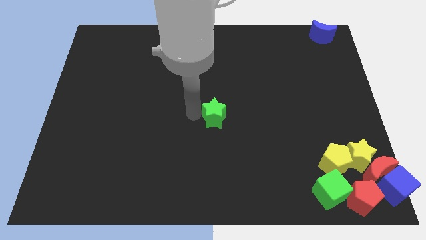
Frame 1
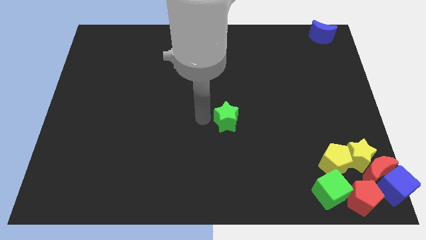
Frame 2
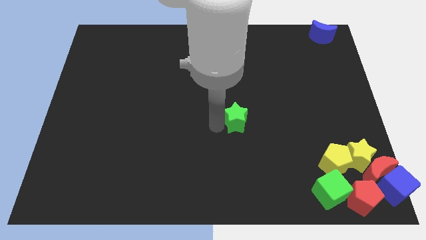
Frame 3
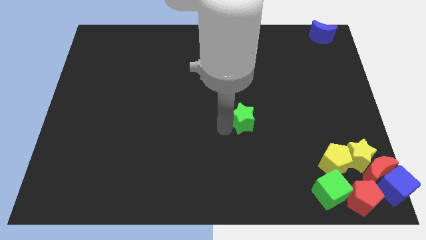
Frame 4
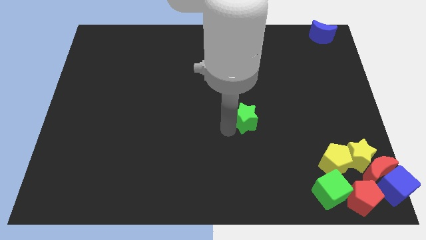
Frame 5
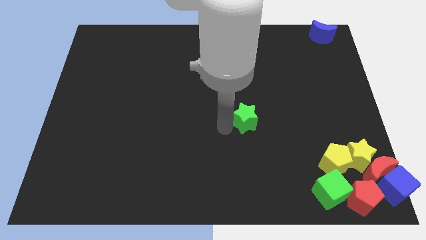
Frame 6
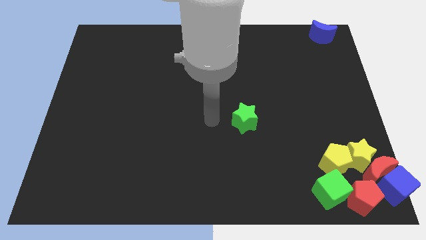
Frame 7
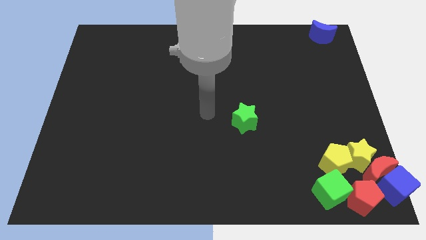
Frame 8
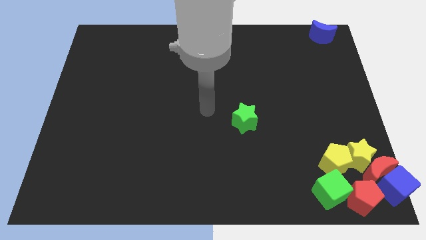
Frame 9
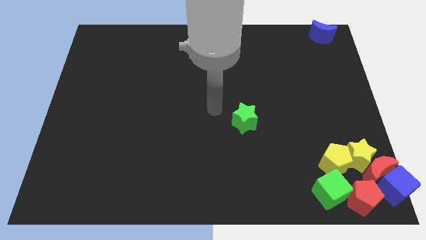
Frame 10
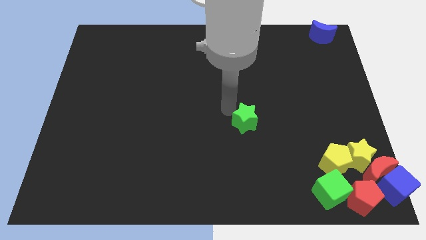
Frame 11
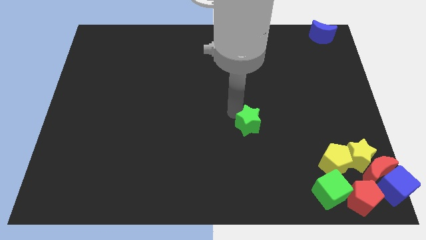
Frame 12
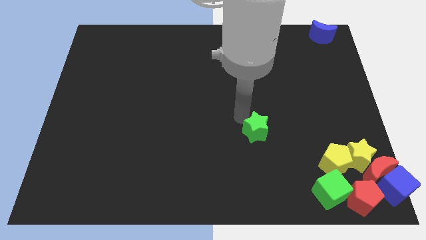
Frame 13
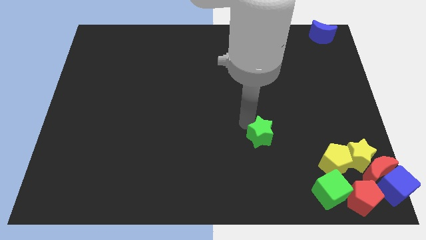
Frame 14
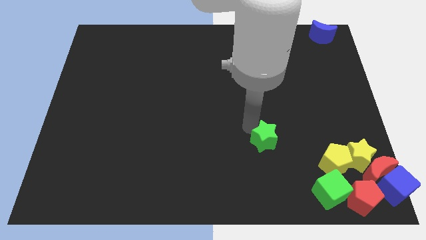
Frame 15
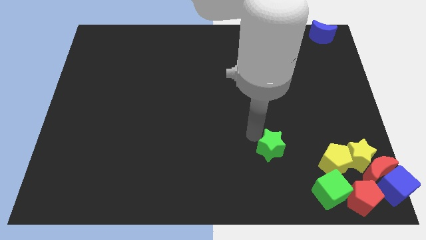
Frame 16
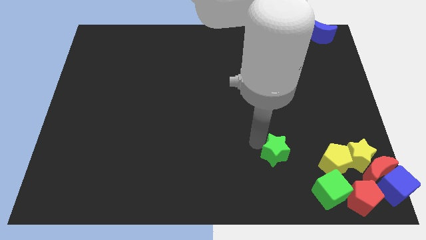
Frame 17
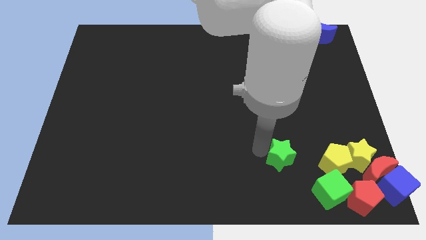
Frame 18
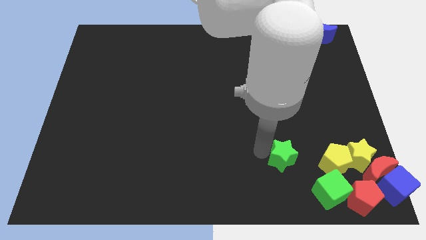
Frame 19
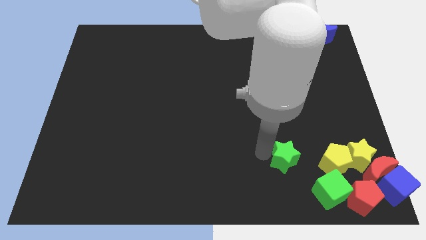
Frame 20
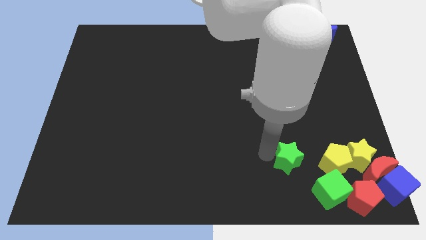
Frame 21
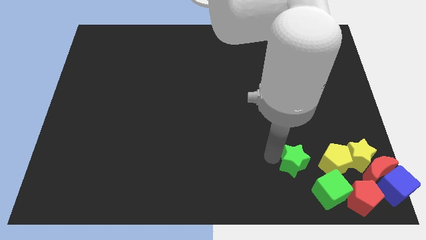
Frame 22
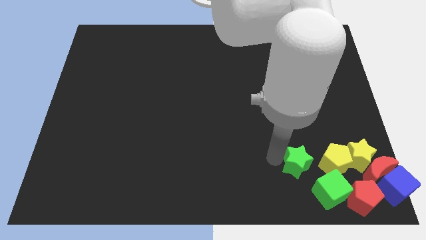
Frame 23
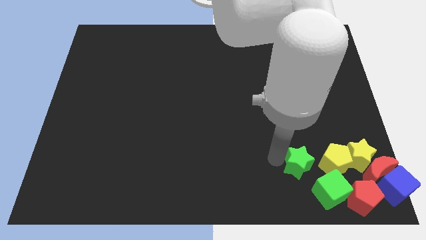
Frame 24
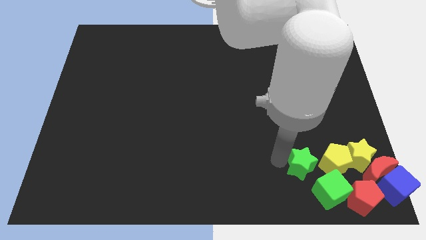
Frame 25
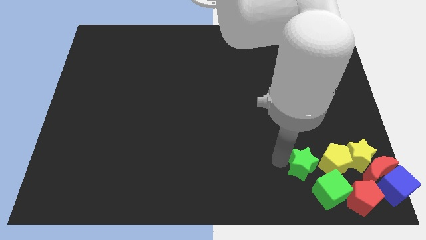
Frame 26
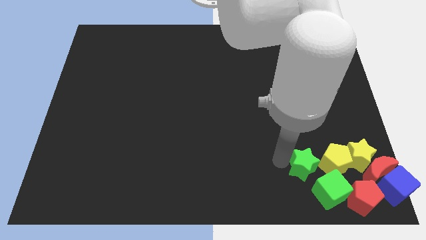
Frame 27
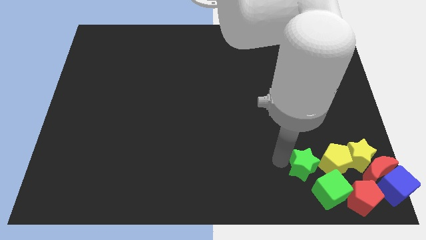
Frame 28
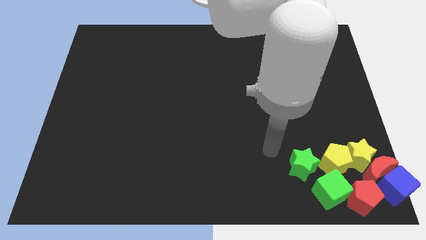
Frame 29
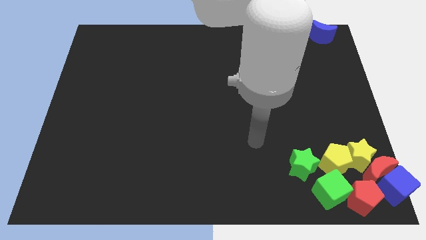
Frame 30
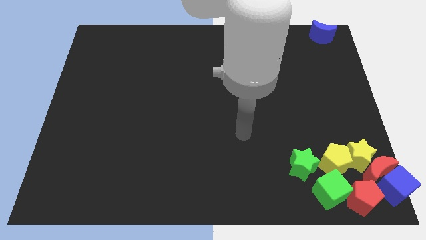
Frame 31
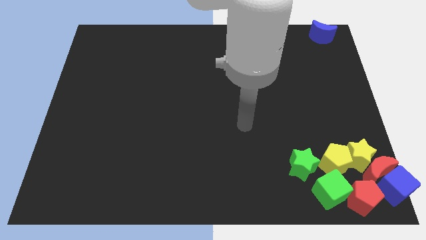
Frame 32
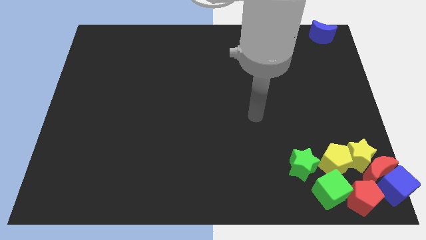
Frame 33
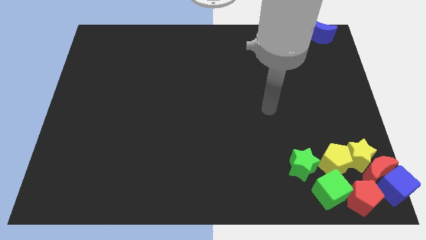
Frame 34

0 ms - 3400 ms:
move green star to the top left side of the green cube

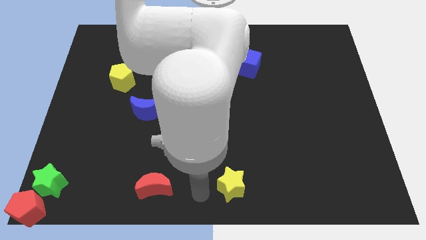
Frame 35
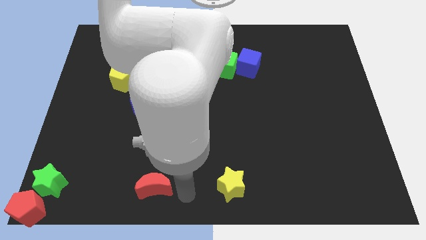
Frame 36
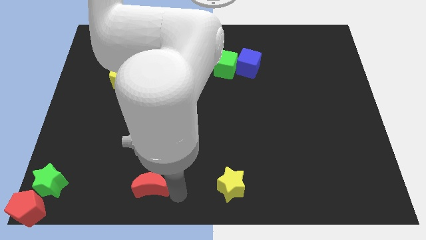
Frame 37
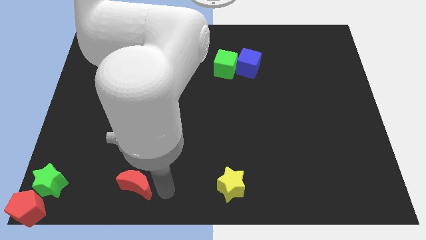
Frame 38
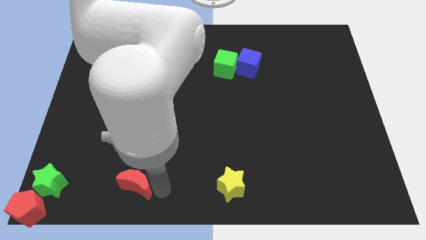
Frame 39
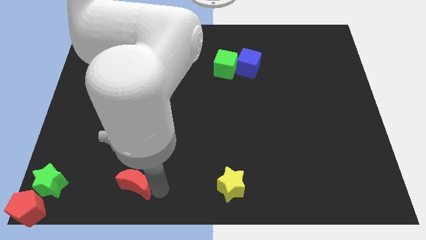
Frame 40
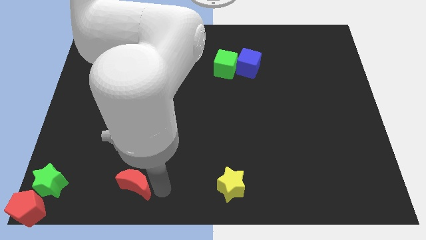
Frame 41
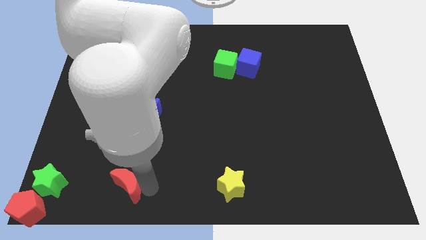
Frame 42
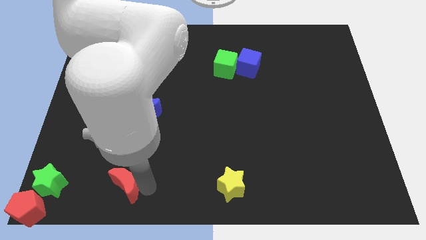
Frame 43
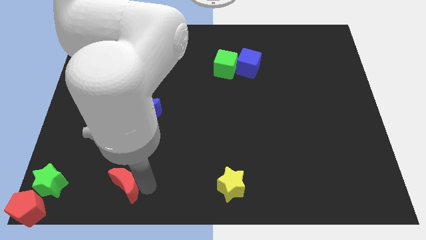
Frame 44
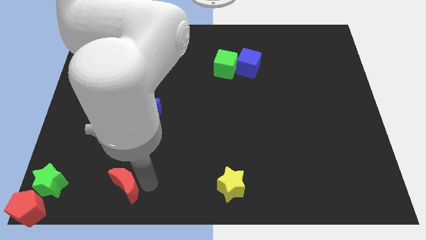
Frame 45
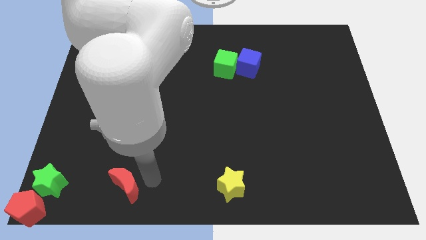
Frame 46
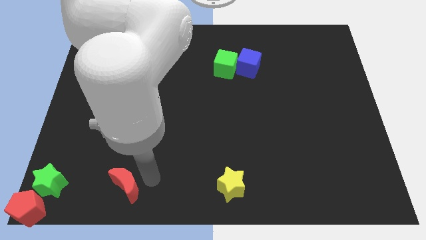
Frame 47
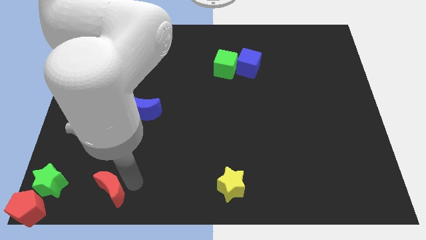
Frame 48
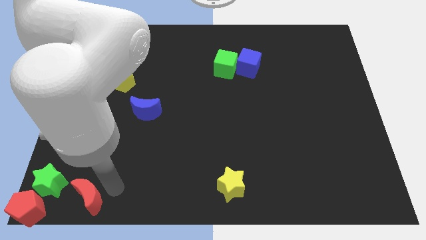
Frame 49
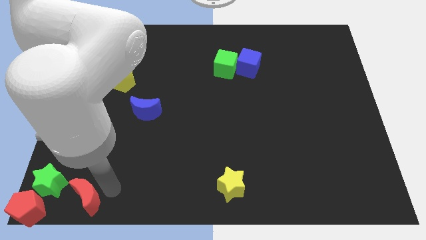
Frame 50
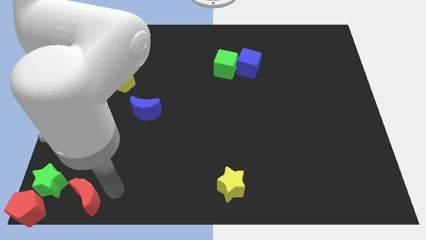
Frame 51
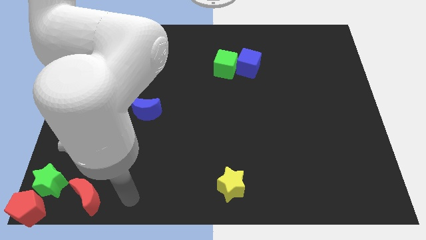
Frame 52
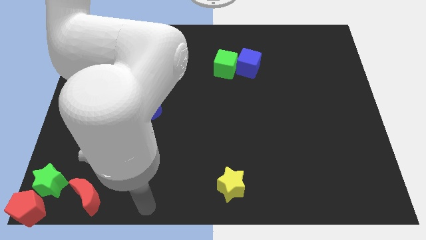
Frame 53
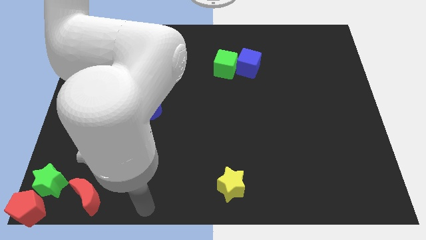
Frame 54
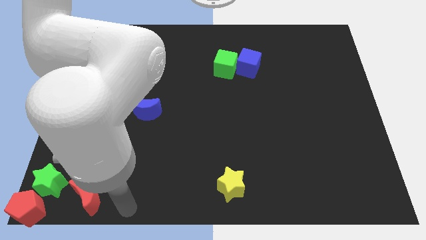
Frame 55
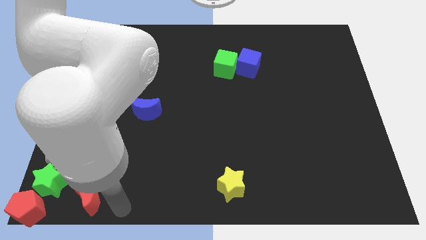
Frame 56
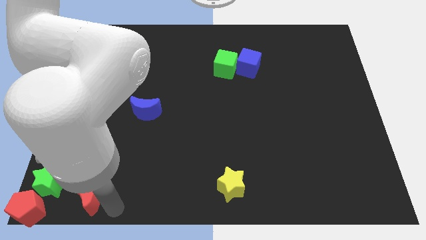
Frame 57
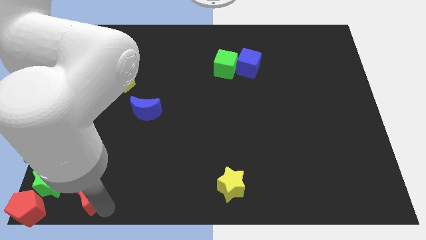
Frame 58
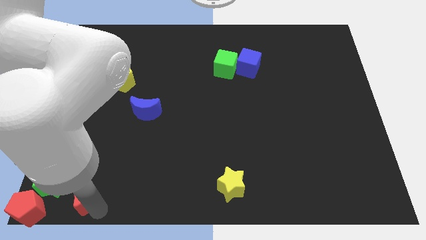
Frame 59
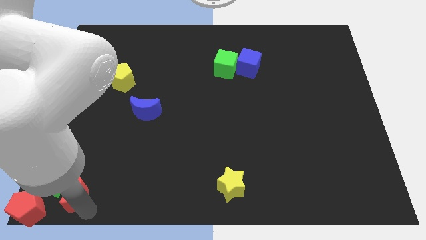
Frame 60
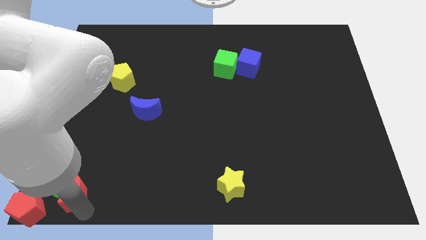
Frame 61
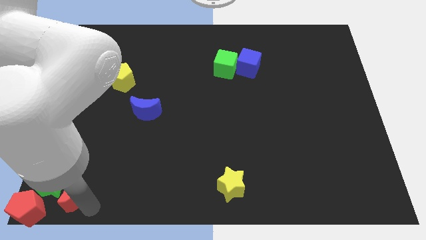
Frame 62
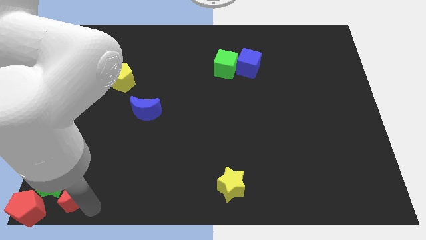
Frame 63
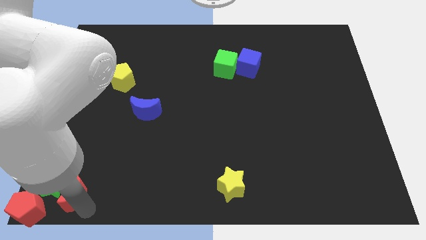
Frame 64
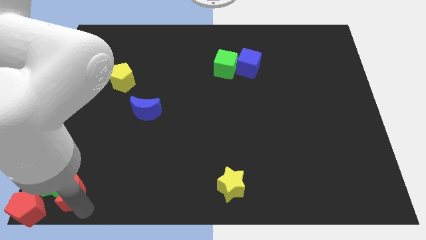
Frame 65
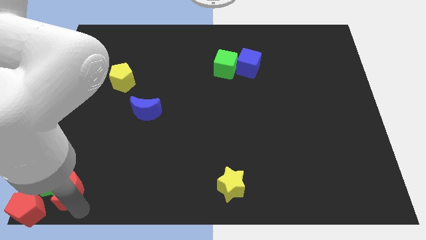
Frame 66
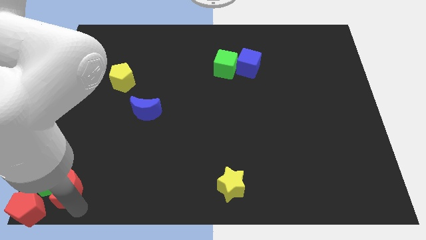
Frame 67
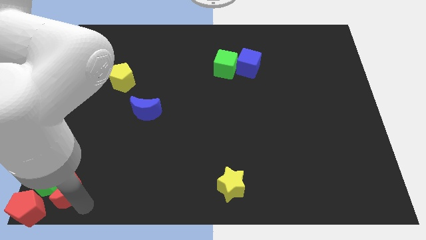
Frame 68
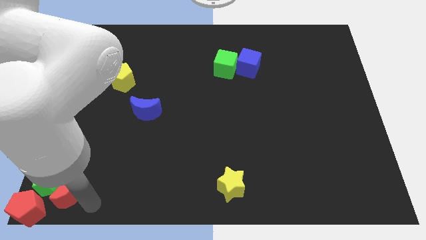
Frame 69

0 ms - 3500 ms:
move the red moon near to the green star

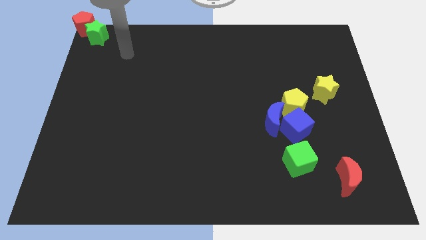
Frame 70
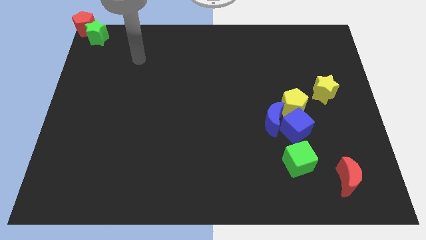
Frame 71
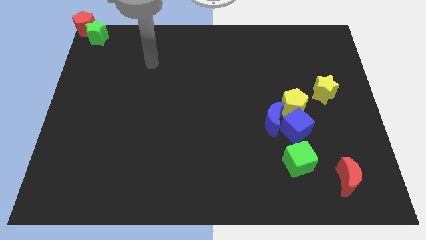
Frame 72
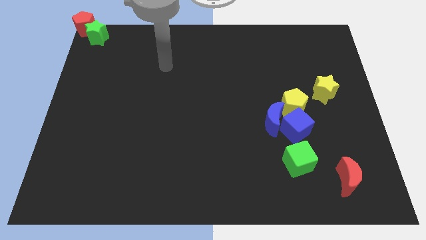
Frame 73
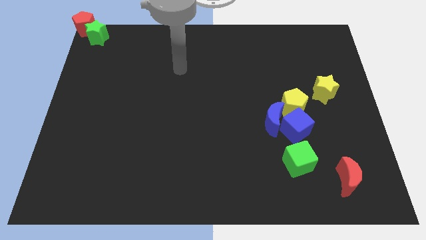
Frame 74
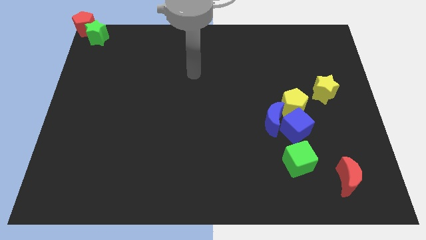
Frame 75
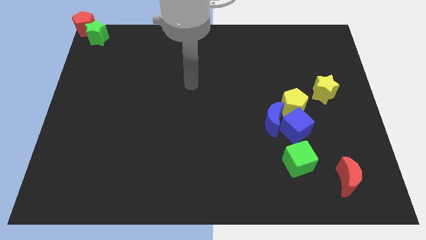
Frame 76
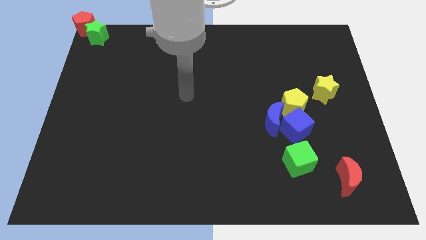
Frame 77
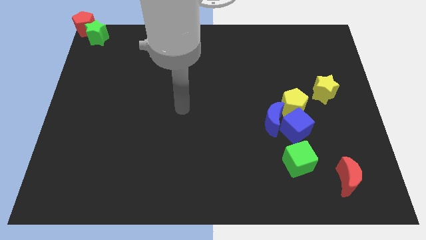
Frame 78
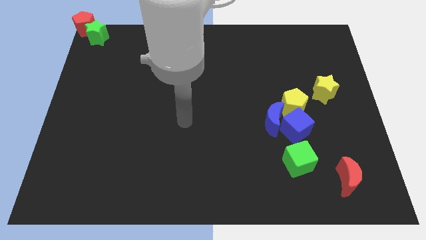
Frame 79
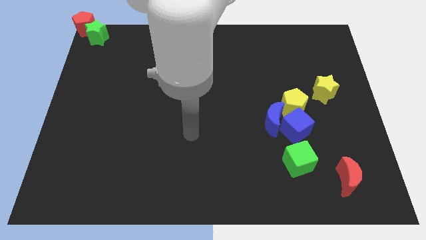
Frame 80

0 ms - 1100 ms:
point your arm at the center of the board

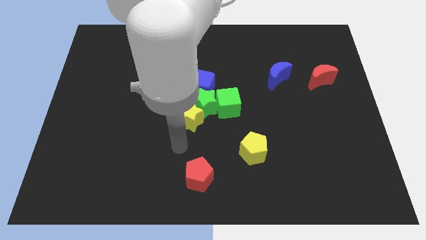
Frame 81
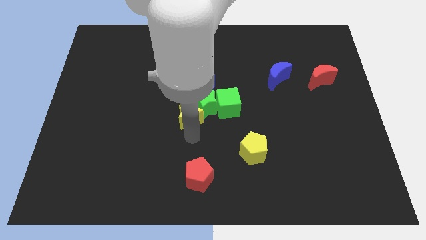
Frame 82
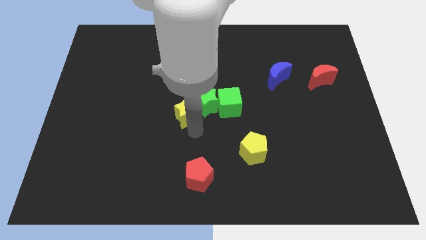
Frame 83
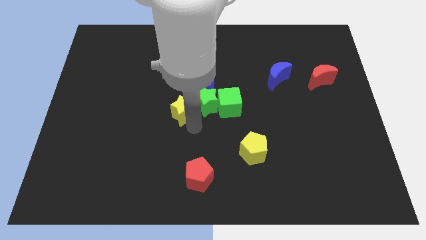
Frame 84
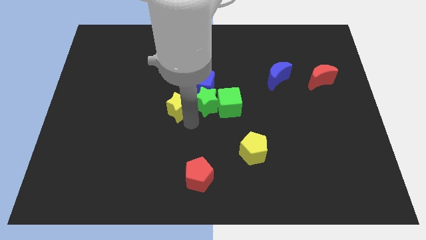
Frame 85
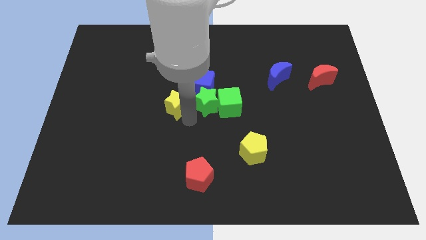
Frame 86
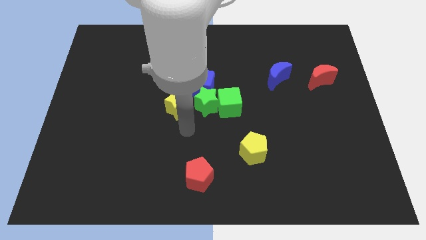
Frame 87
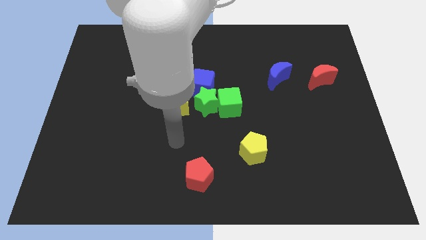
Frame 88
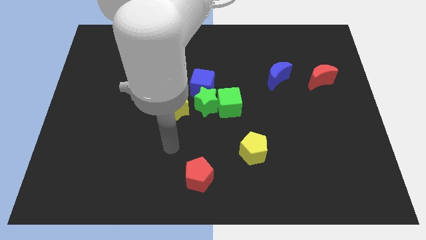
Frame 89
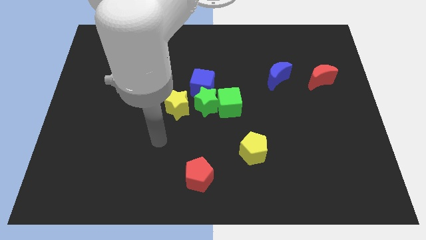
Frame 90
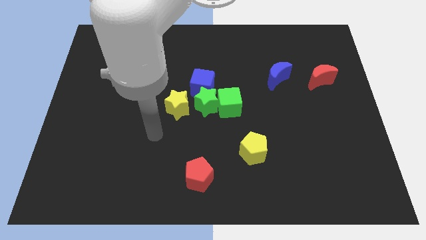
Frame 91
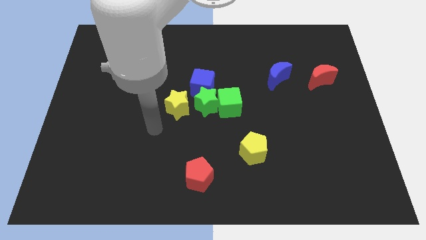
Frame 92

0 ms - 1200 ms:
seprate yellow star from green star
